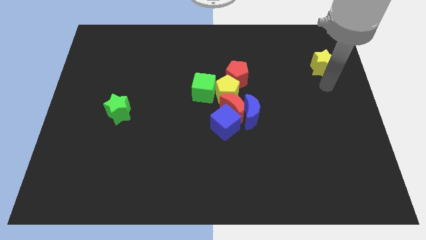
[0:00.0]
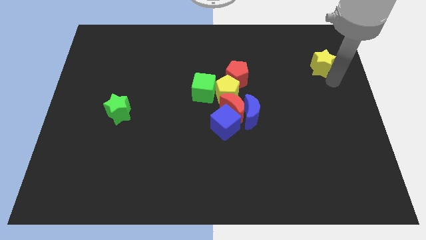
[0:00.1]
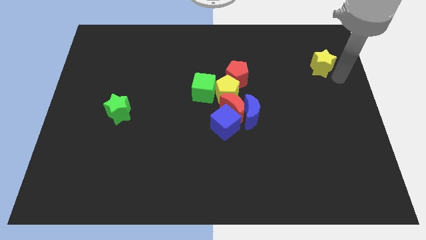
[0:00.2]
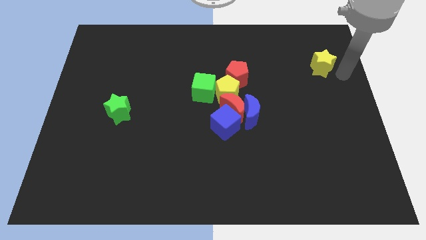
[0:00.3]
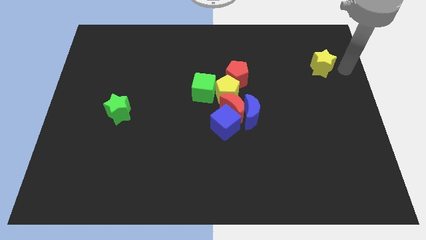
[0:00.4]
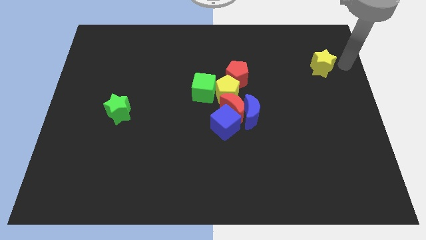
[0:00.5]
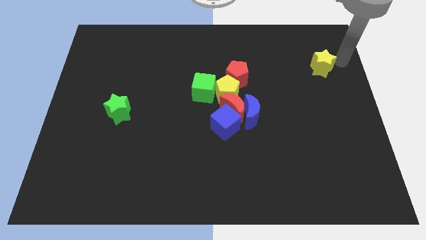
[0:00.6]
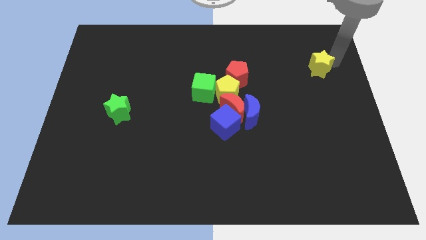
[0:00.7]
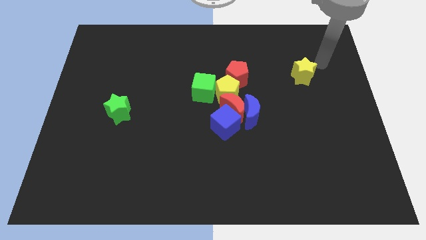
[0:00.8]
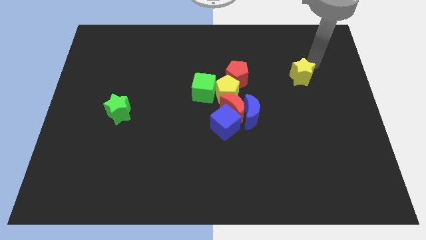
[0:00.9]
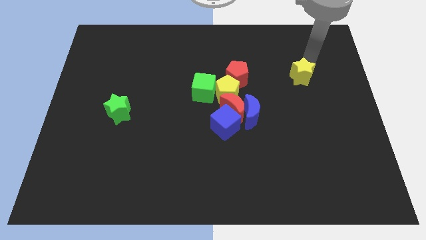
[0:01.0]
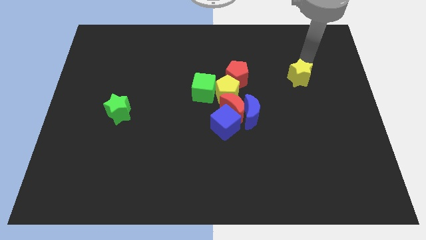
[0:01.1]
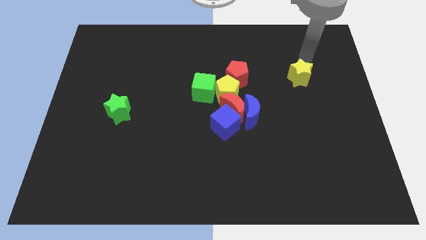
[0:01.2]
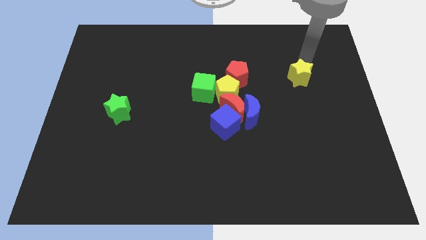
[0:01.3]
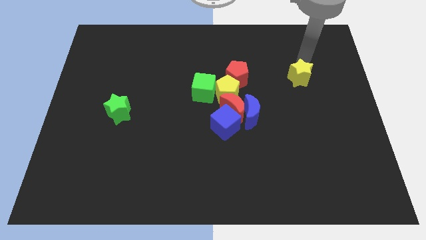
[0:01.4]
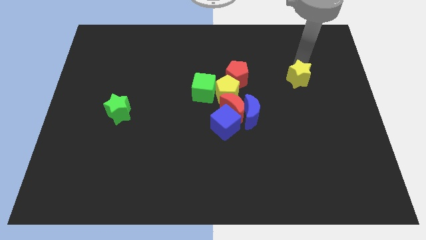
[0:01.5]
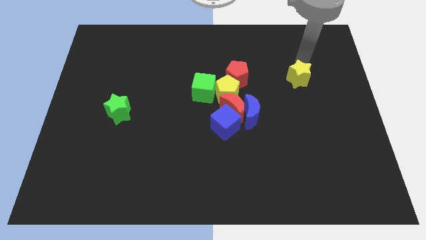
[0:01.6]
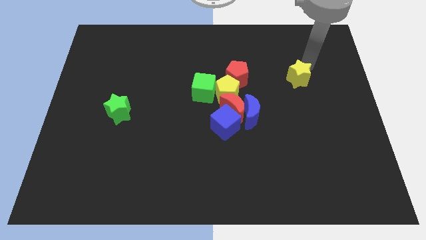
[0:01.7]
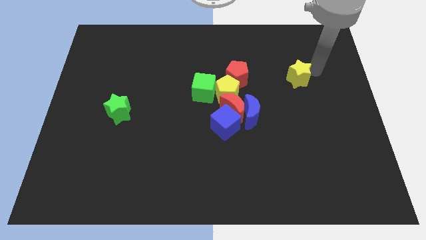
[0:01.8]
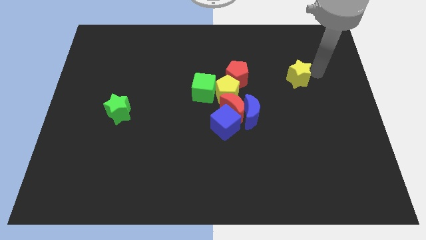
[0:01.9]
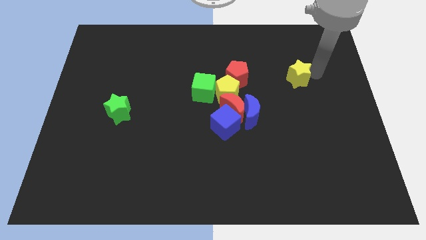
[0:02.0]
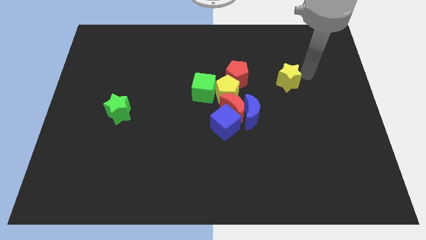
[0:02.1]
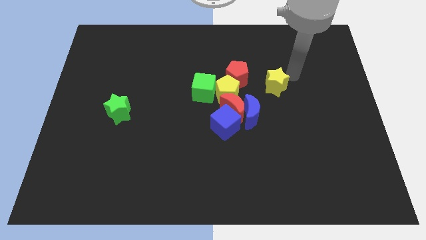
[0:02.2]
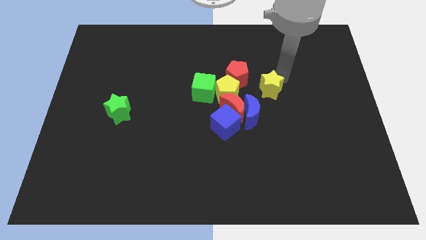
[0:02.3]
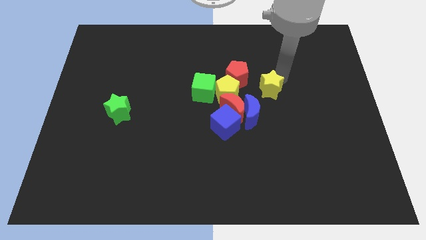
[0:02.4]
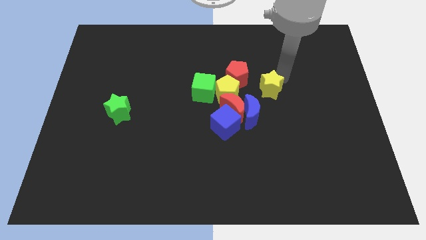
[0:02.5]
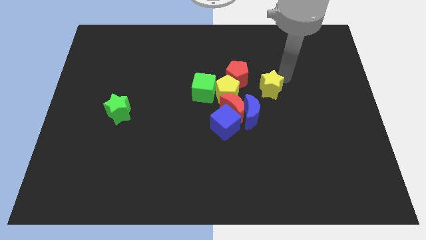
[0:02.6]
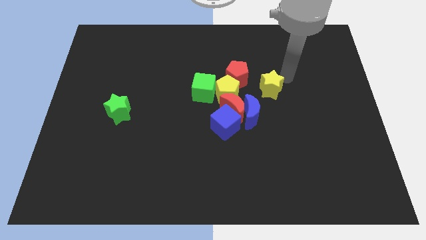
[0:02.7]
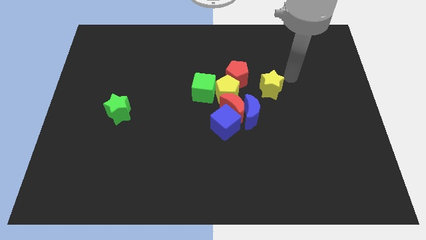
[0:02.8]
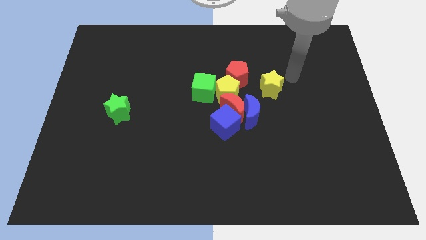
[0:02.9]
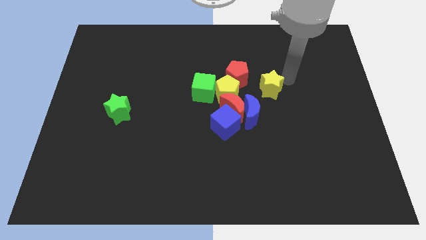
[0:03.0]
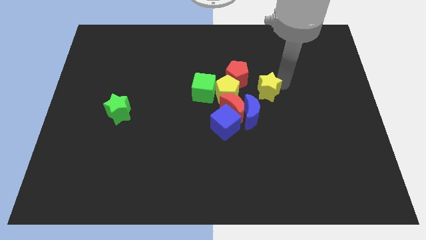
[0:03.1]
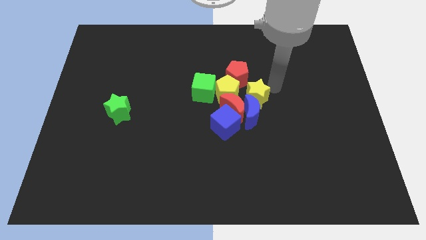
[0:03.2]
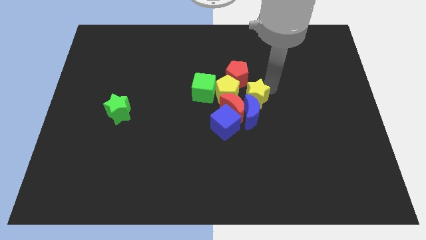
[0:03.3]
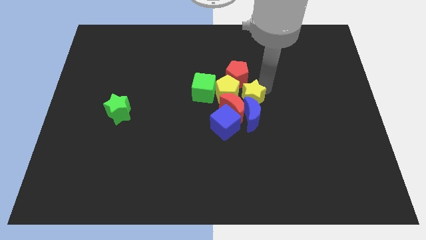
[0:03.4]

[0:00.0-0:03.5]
move the yellow star right to the yellow pentagon

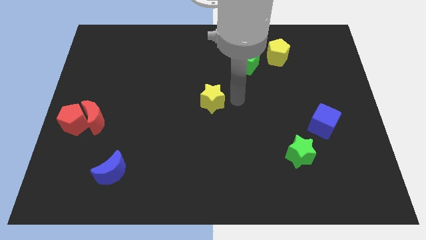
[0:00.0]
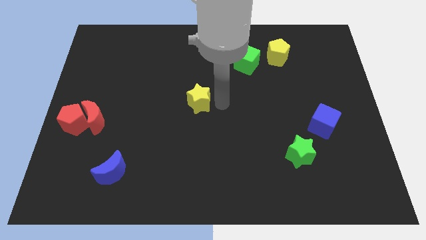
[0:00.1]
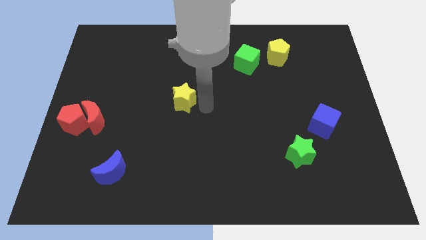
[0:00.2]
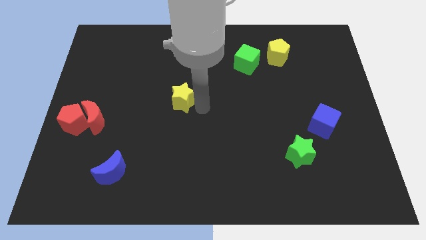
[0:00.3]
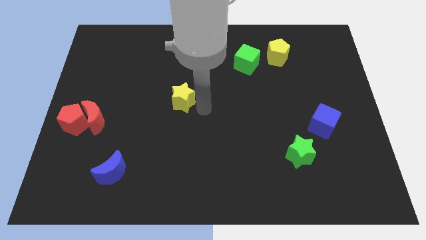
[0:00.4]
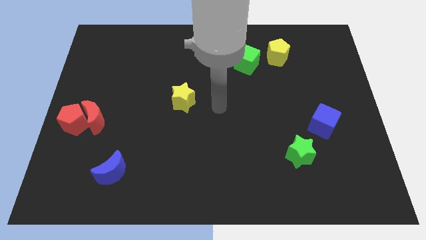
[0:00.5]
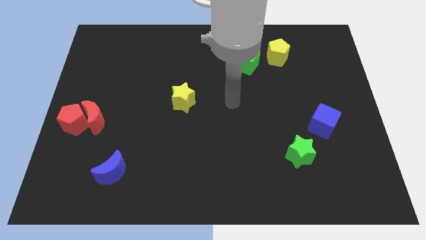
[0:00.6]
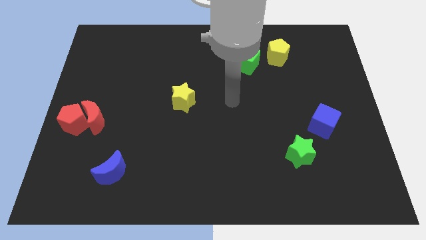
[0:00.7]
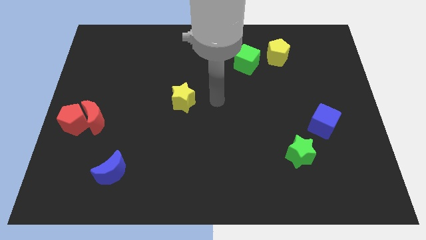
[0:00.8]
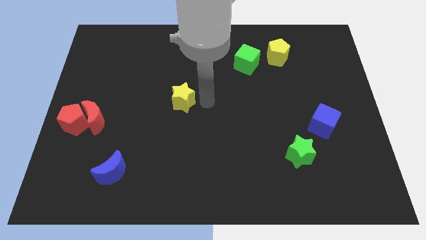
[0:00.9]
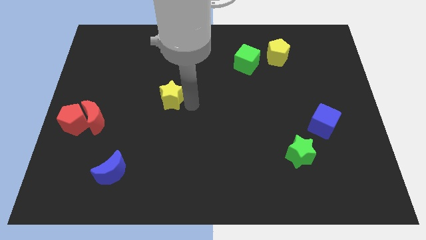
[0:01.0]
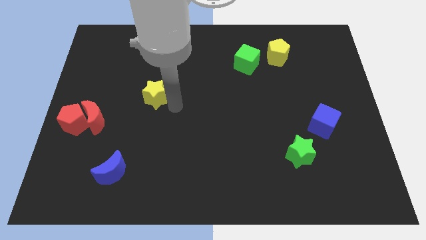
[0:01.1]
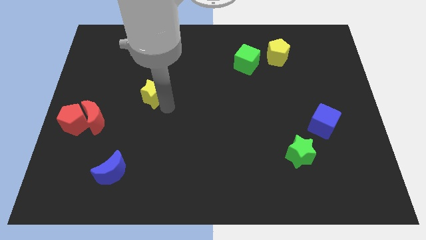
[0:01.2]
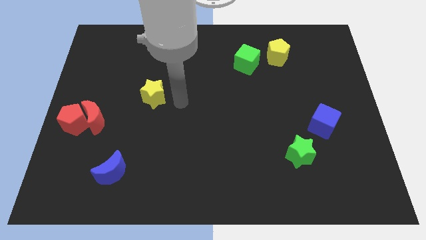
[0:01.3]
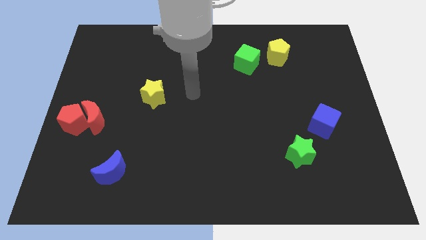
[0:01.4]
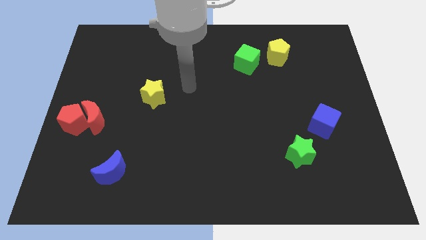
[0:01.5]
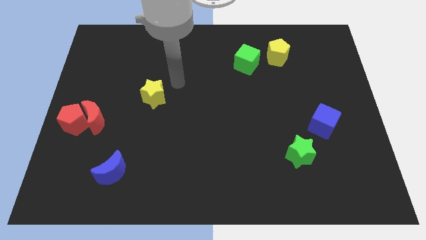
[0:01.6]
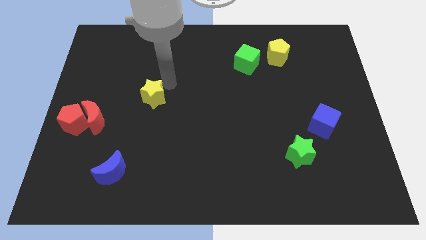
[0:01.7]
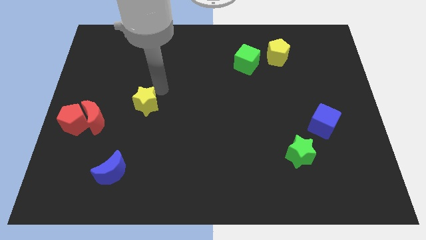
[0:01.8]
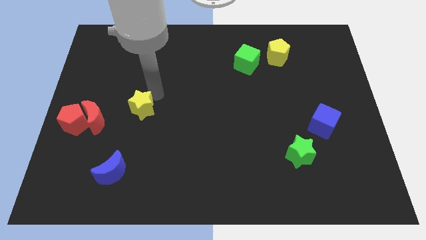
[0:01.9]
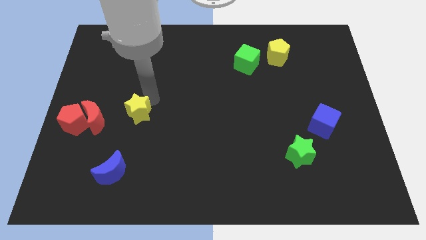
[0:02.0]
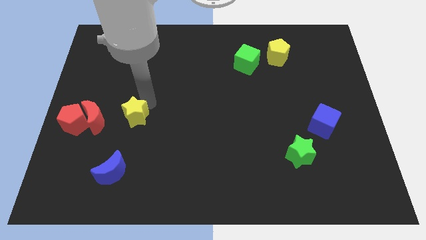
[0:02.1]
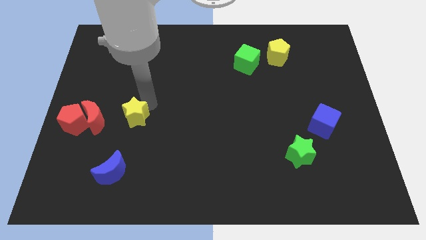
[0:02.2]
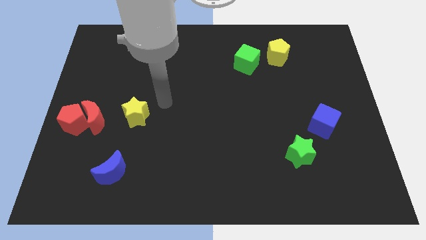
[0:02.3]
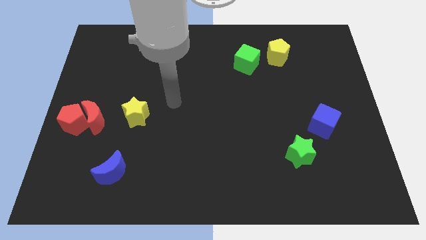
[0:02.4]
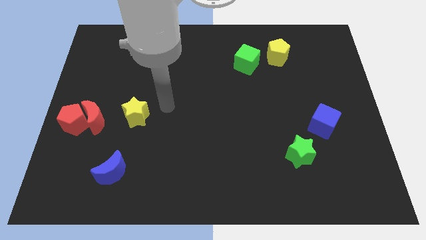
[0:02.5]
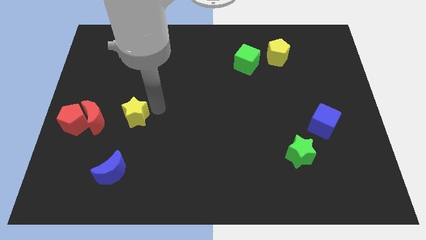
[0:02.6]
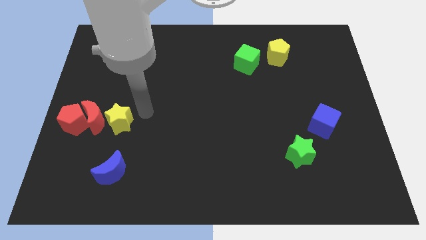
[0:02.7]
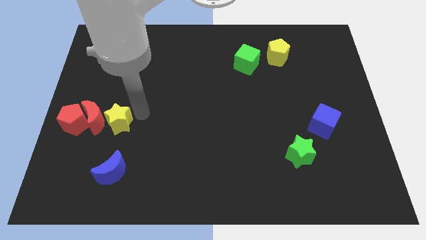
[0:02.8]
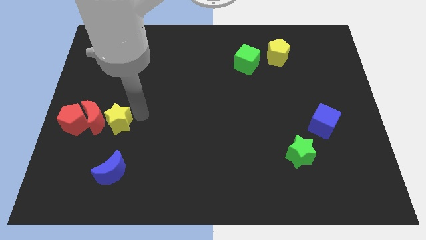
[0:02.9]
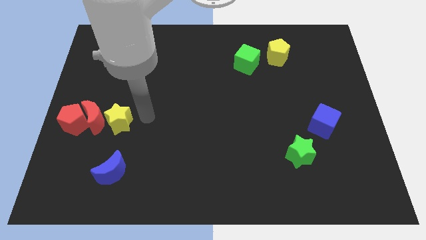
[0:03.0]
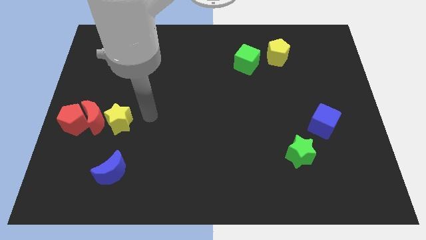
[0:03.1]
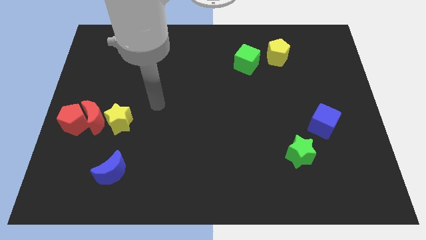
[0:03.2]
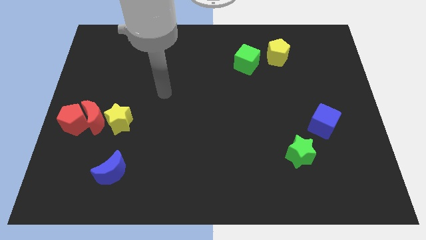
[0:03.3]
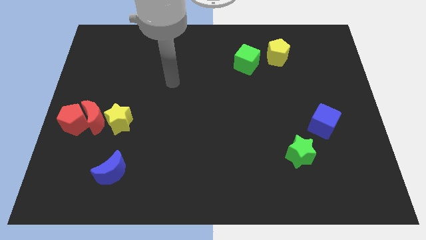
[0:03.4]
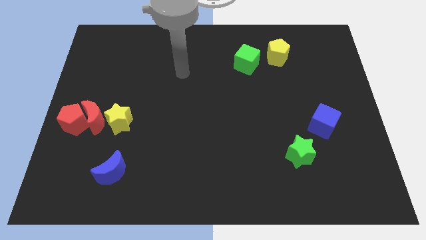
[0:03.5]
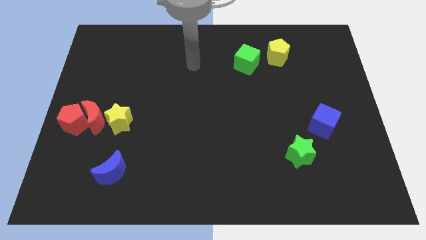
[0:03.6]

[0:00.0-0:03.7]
push the yellow star to the parallel right to the blue crescent

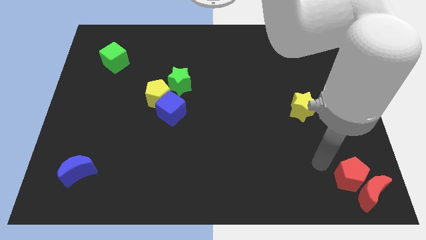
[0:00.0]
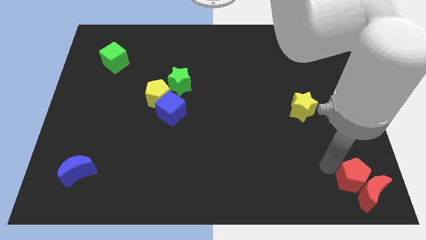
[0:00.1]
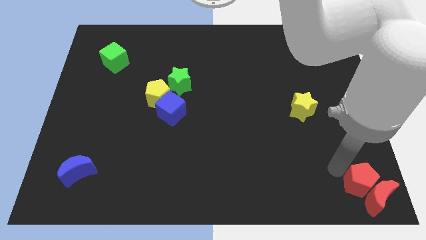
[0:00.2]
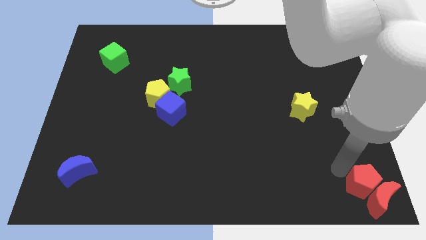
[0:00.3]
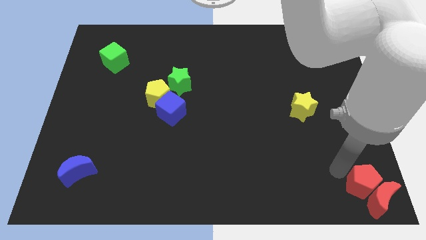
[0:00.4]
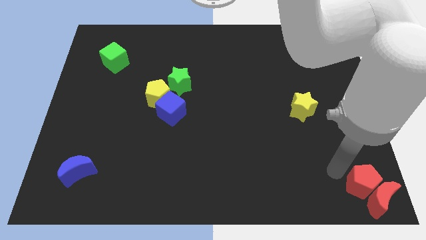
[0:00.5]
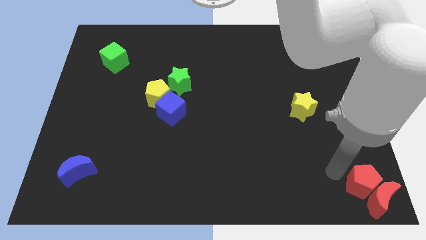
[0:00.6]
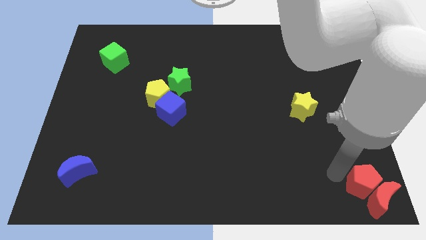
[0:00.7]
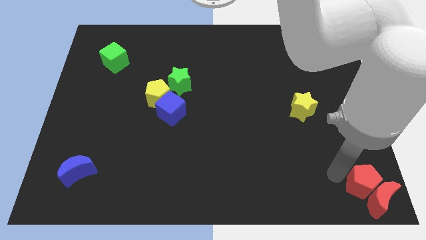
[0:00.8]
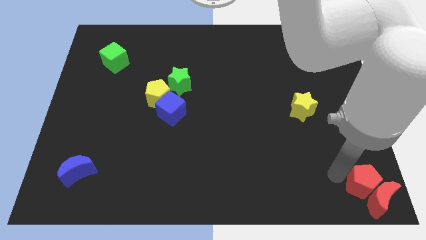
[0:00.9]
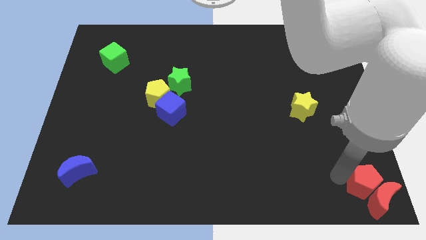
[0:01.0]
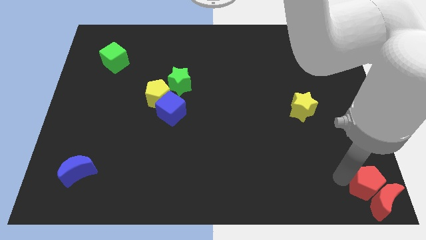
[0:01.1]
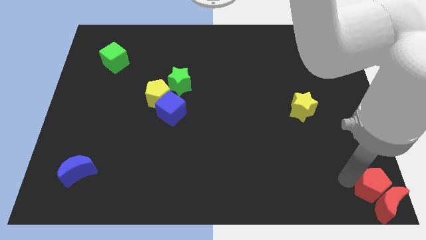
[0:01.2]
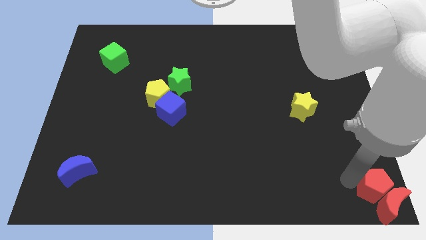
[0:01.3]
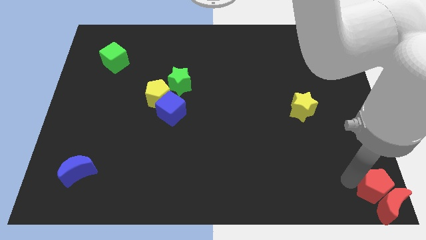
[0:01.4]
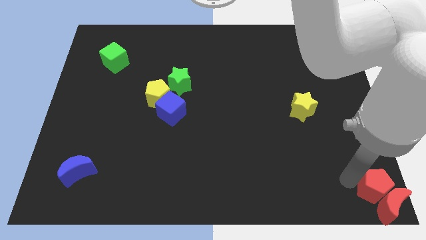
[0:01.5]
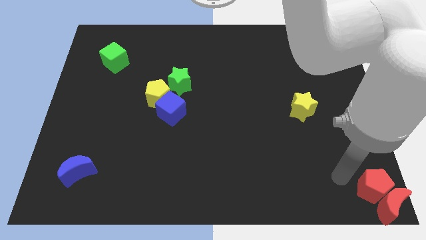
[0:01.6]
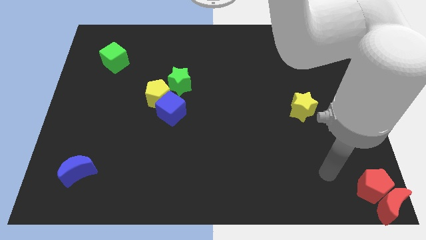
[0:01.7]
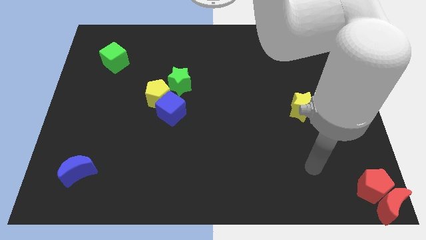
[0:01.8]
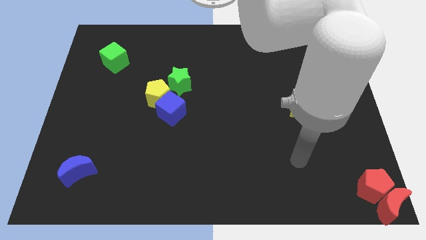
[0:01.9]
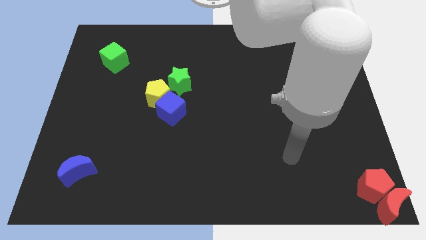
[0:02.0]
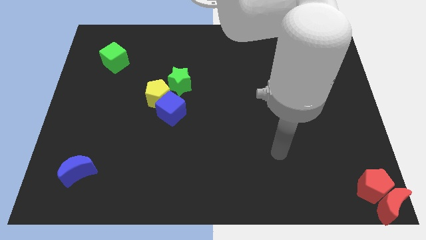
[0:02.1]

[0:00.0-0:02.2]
push the red crescent along with red pentagon to right corner
